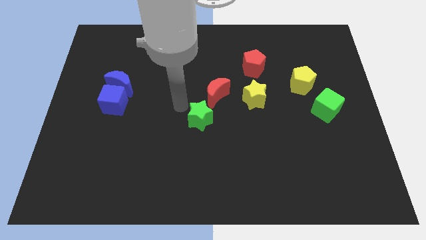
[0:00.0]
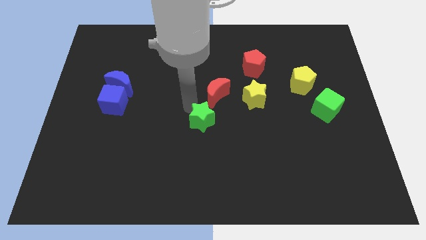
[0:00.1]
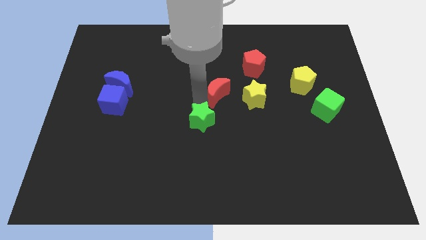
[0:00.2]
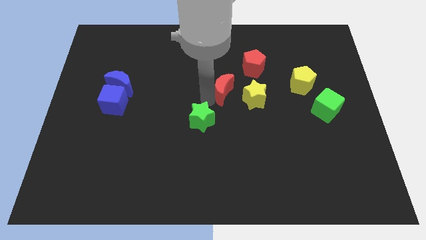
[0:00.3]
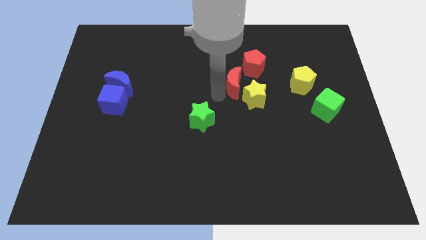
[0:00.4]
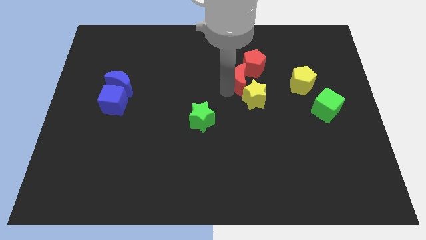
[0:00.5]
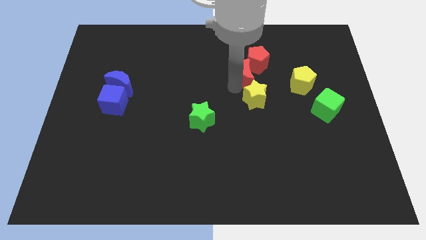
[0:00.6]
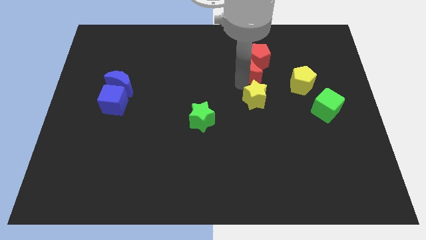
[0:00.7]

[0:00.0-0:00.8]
push red crescent above yellow star

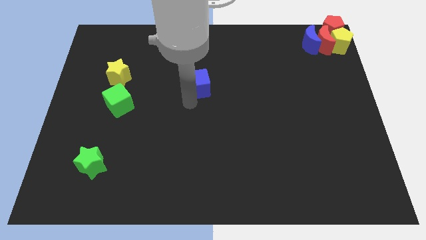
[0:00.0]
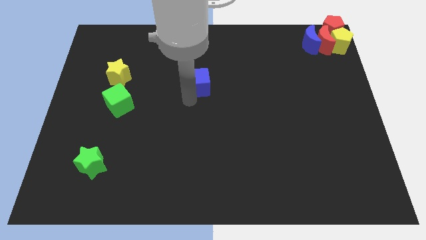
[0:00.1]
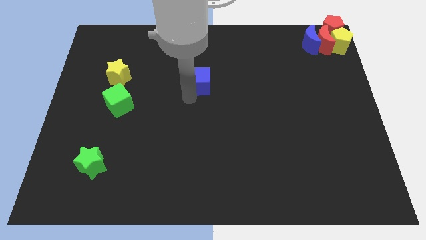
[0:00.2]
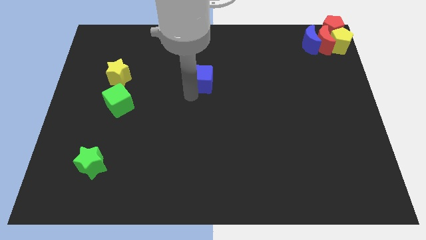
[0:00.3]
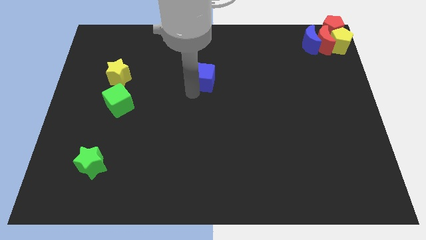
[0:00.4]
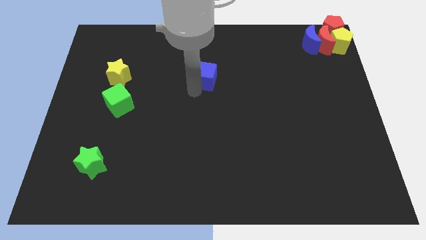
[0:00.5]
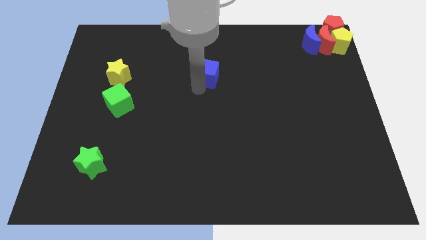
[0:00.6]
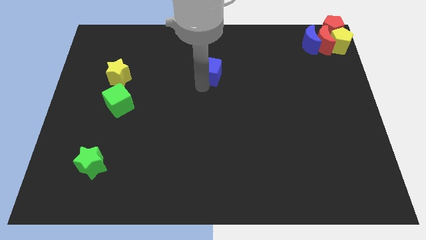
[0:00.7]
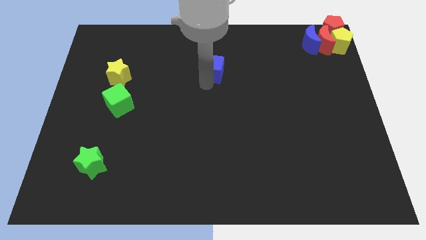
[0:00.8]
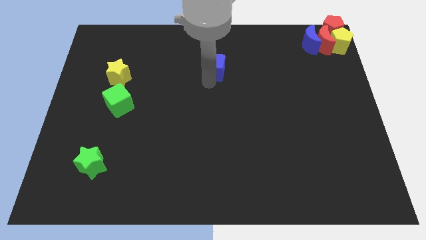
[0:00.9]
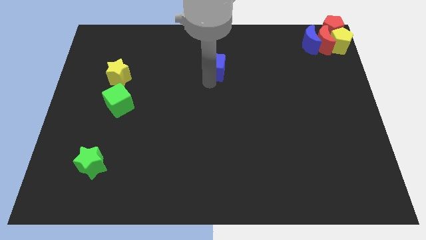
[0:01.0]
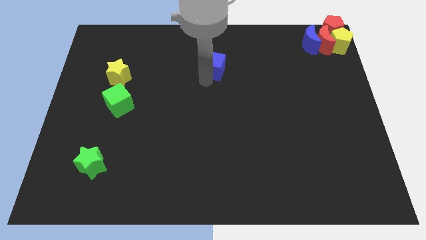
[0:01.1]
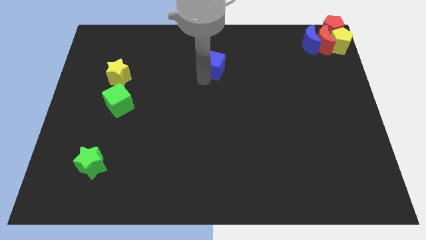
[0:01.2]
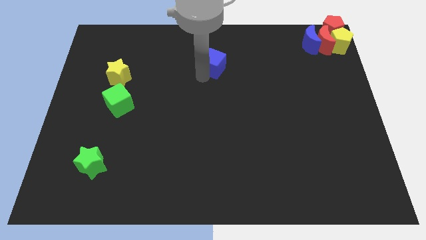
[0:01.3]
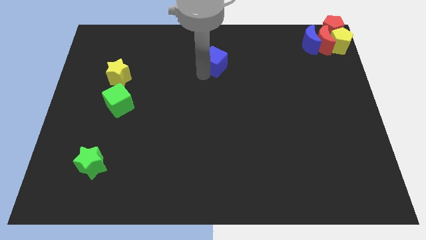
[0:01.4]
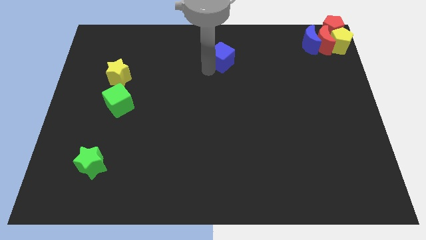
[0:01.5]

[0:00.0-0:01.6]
place the blue cube in between the blue crescent and yellow star

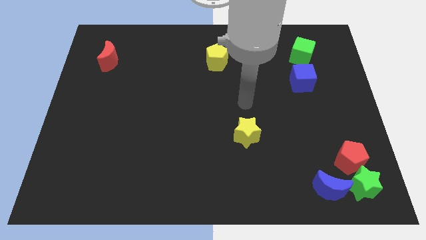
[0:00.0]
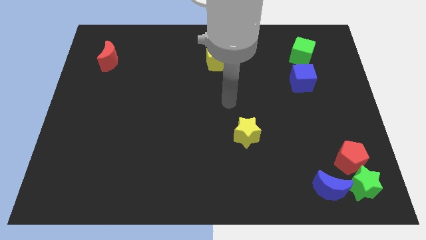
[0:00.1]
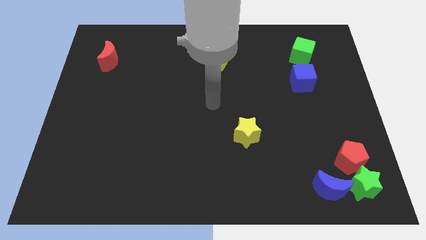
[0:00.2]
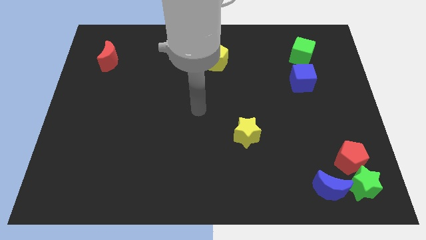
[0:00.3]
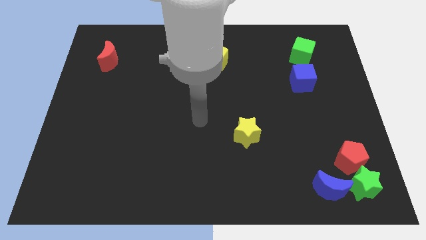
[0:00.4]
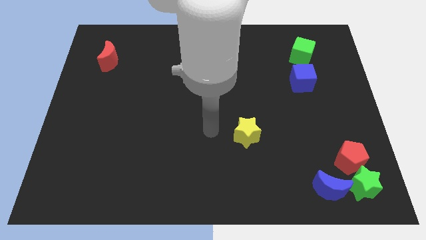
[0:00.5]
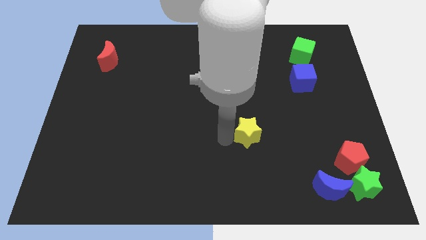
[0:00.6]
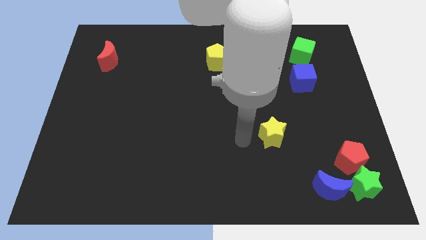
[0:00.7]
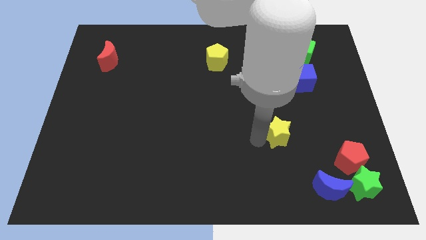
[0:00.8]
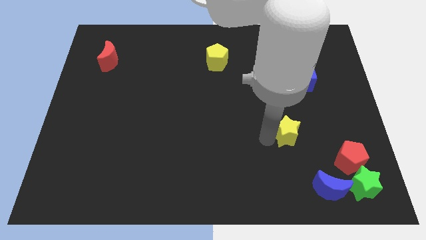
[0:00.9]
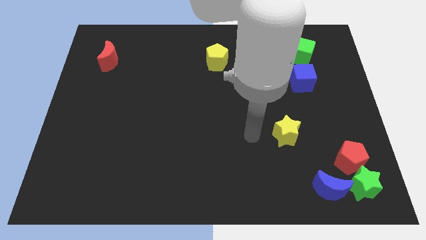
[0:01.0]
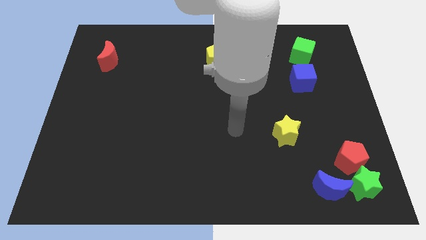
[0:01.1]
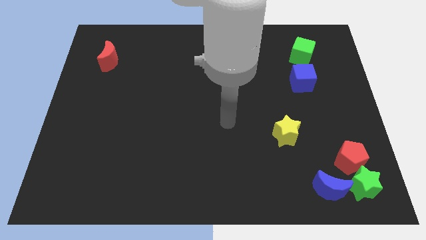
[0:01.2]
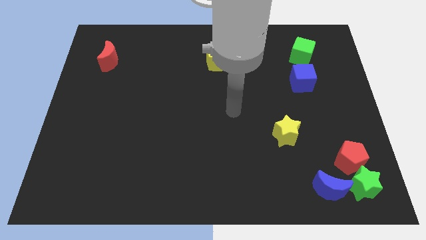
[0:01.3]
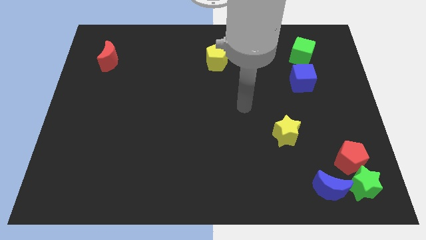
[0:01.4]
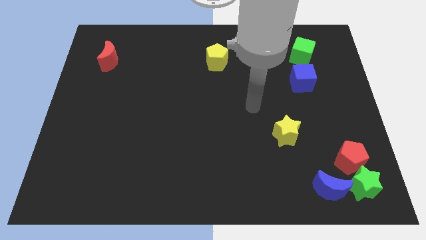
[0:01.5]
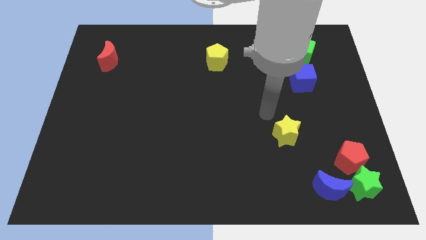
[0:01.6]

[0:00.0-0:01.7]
move yellow star on right corner of the board

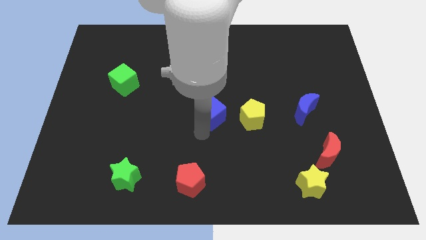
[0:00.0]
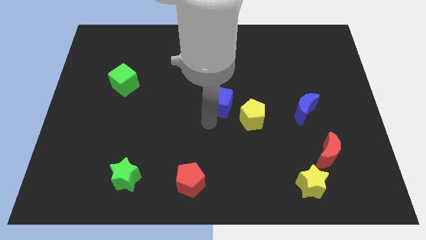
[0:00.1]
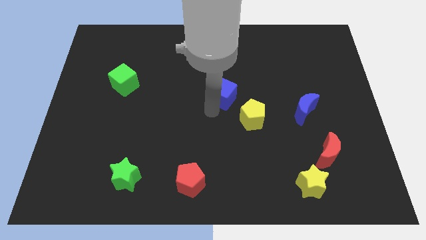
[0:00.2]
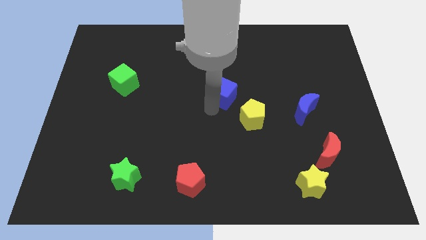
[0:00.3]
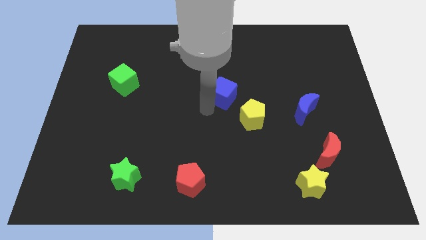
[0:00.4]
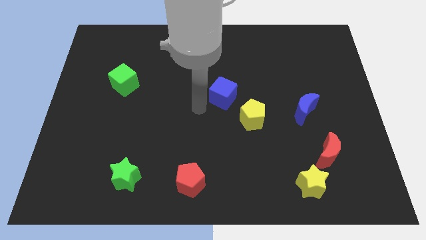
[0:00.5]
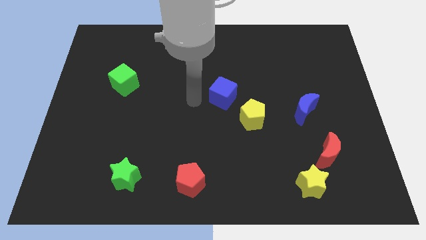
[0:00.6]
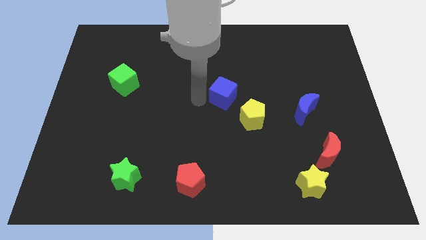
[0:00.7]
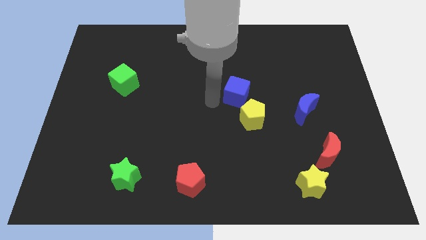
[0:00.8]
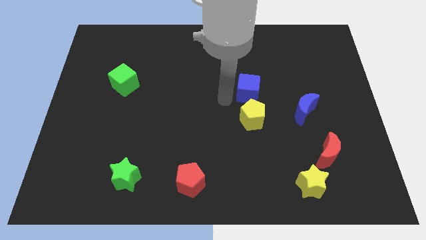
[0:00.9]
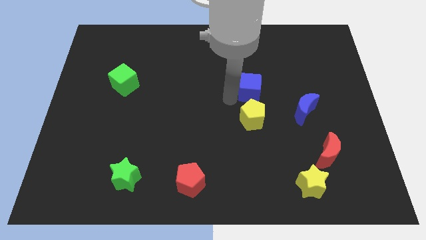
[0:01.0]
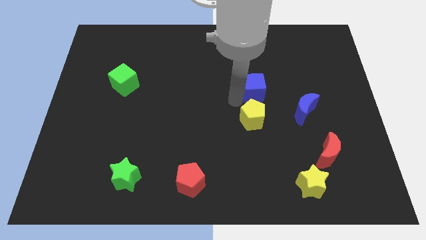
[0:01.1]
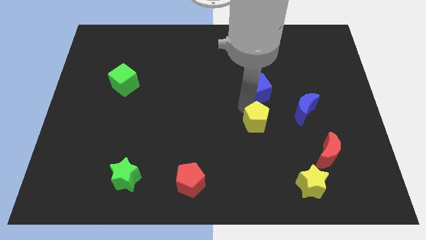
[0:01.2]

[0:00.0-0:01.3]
push the blue cube above the yellow pentagon

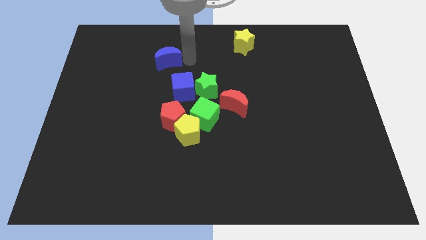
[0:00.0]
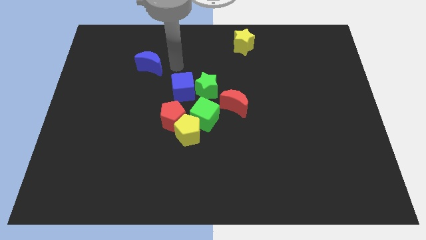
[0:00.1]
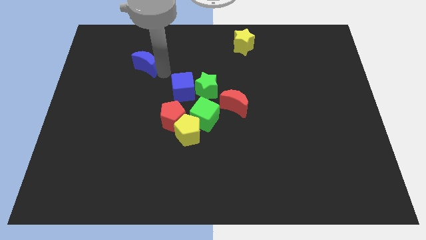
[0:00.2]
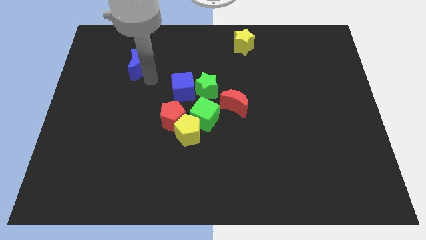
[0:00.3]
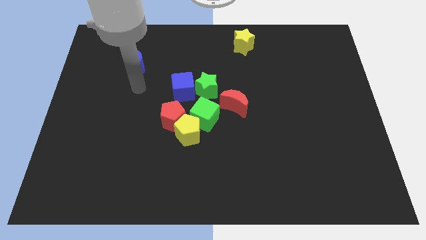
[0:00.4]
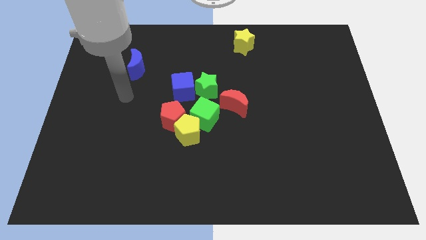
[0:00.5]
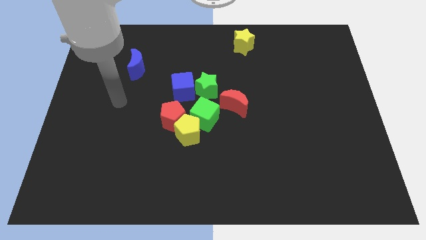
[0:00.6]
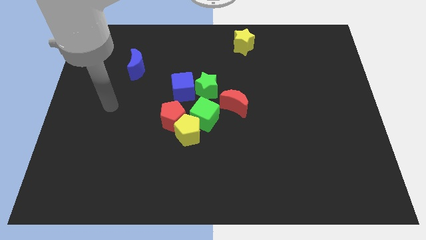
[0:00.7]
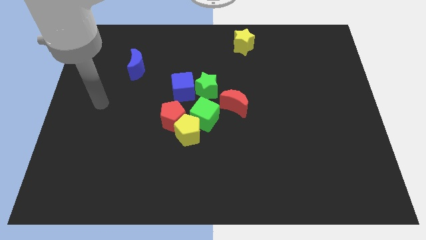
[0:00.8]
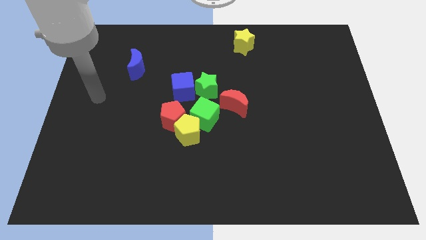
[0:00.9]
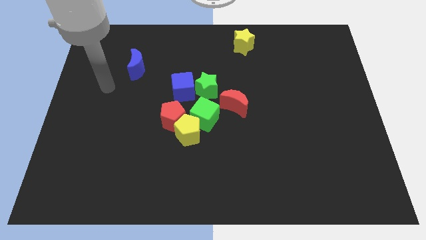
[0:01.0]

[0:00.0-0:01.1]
move the blue semicircle slightly to the left

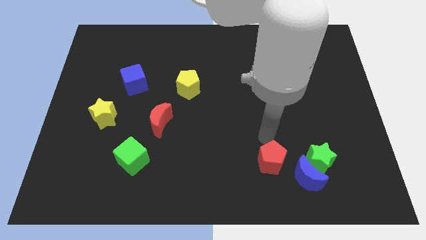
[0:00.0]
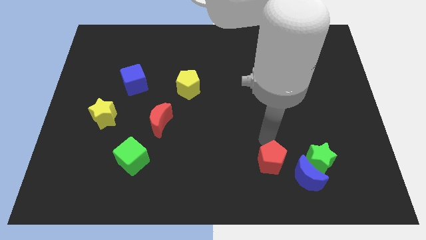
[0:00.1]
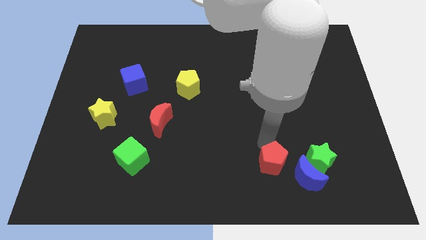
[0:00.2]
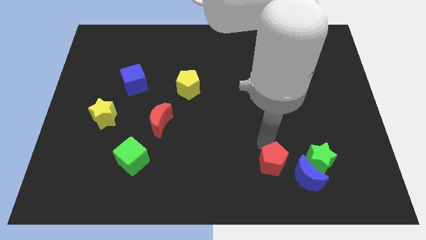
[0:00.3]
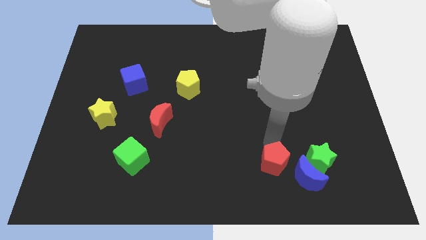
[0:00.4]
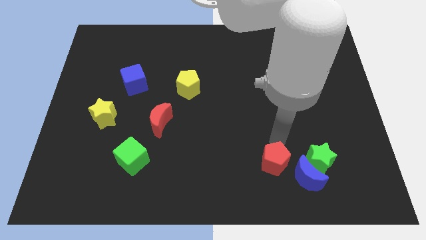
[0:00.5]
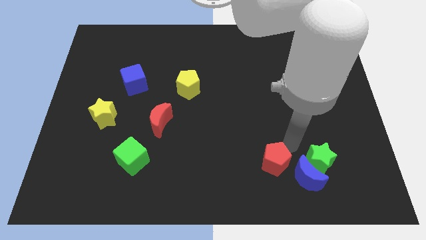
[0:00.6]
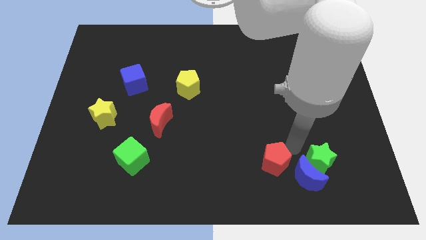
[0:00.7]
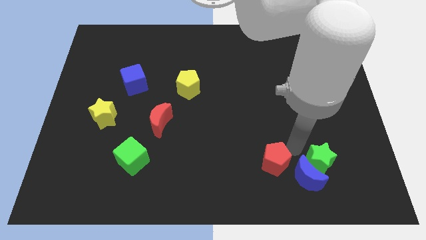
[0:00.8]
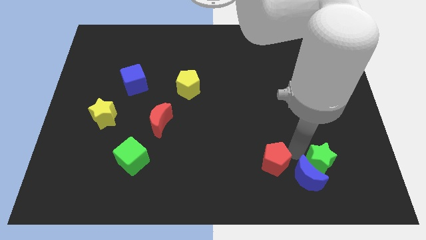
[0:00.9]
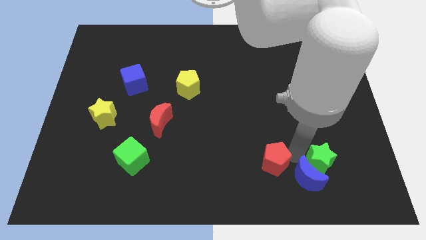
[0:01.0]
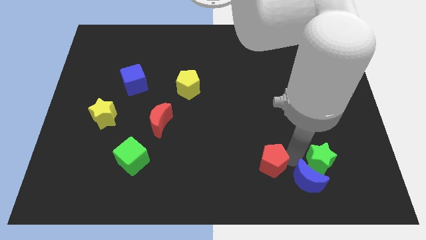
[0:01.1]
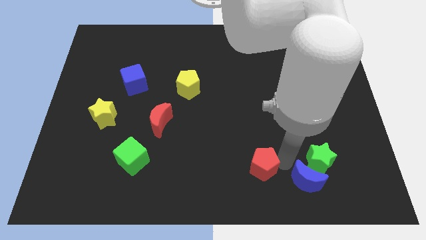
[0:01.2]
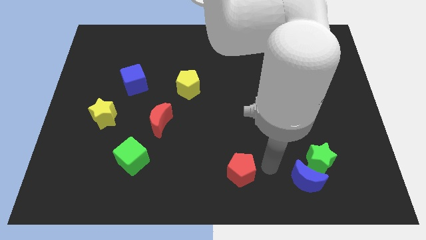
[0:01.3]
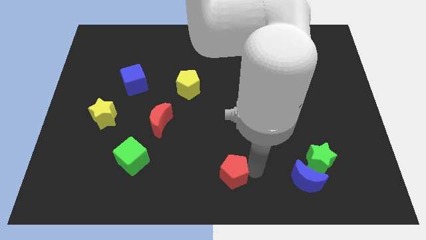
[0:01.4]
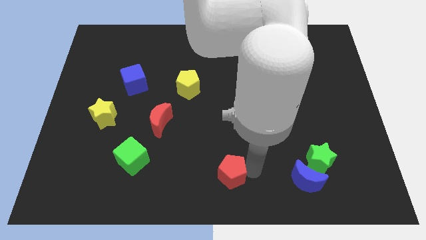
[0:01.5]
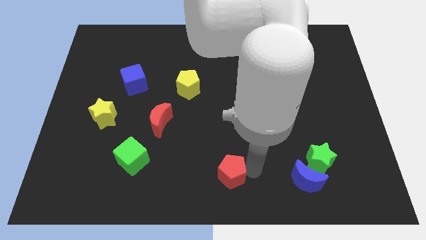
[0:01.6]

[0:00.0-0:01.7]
slide the red pentagon towards the bottom center

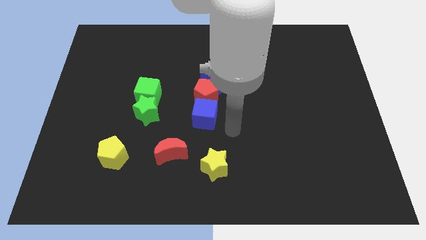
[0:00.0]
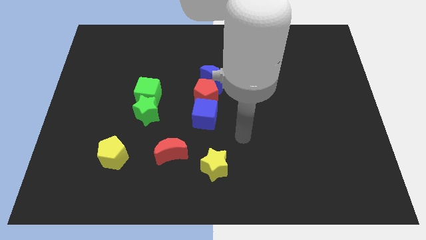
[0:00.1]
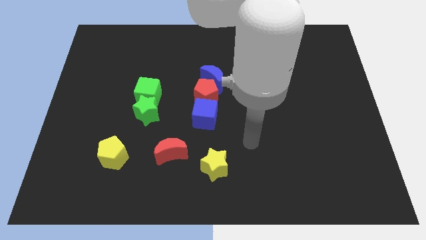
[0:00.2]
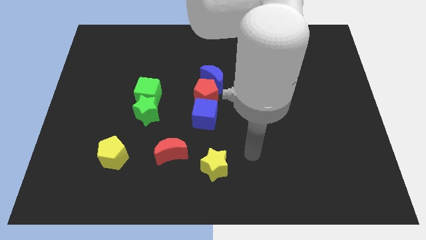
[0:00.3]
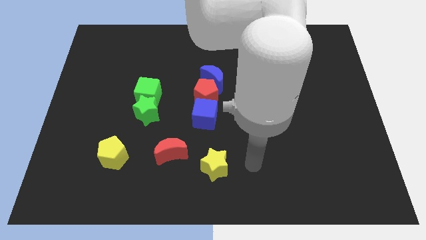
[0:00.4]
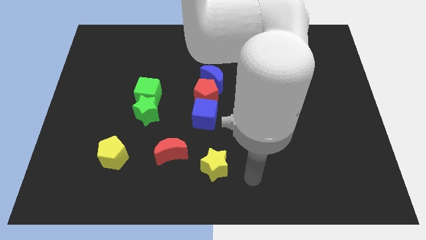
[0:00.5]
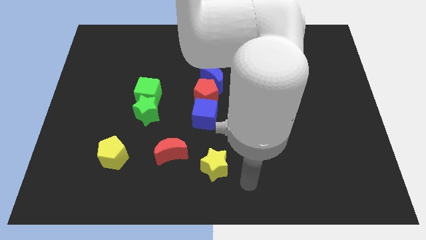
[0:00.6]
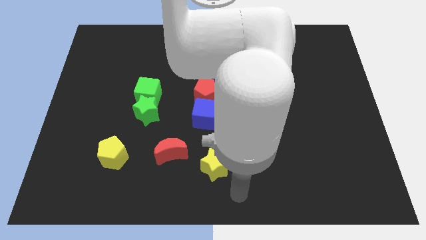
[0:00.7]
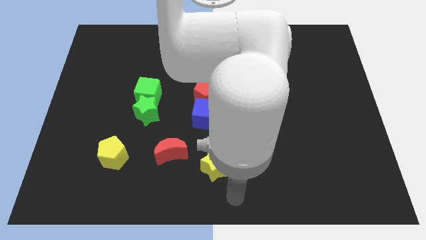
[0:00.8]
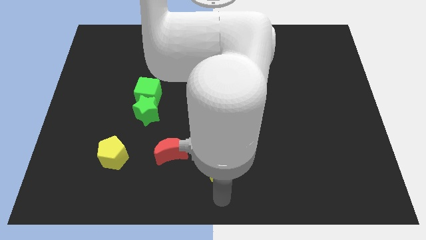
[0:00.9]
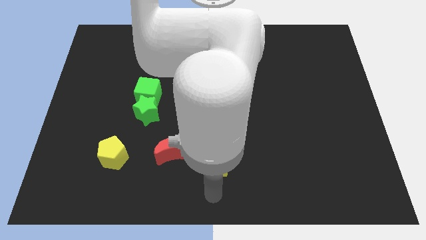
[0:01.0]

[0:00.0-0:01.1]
move your arm towards the bottom of the yellow star
